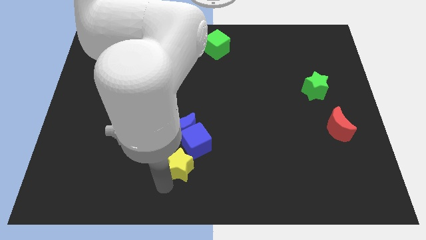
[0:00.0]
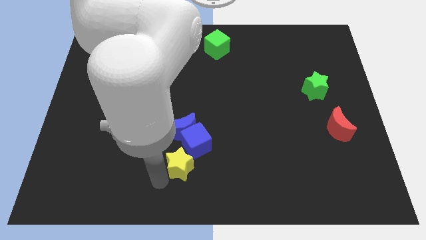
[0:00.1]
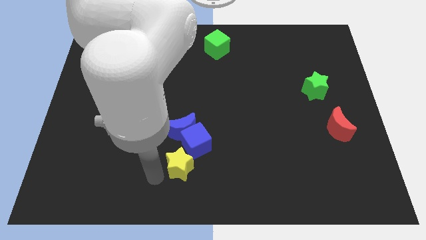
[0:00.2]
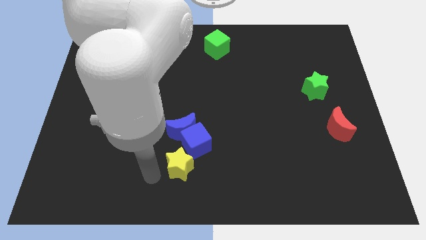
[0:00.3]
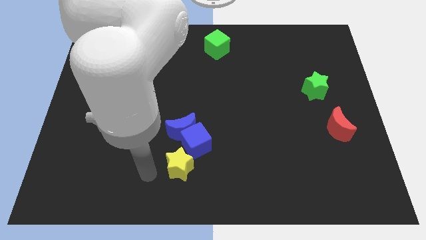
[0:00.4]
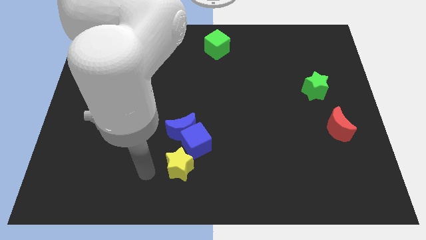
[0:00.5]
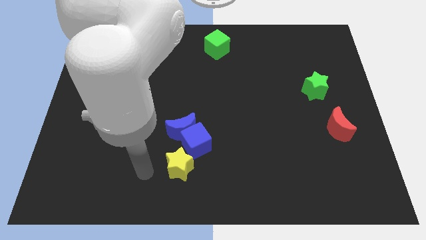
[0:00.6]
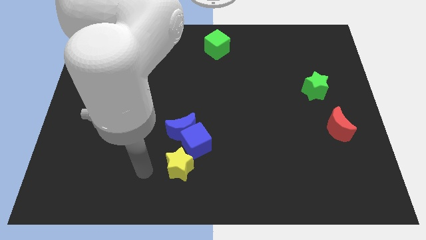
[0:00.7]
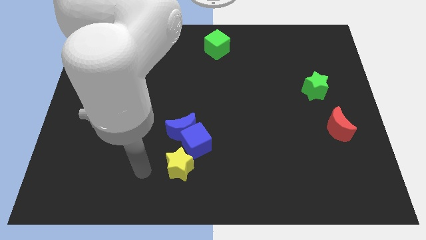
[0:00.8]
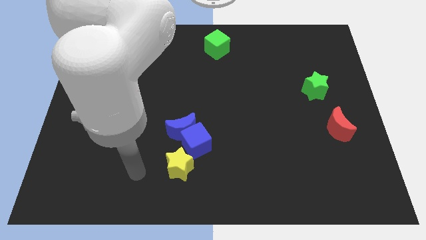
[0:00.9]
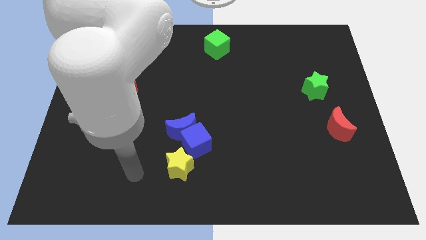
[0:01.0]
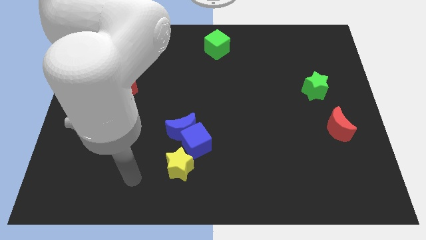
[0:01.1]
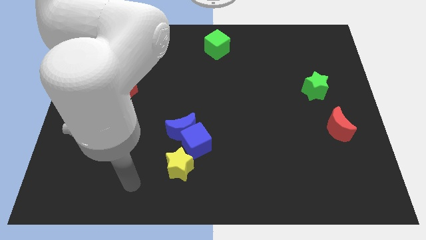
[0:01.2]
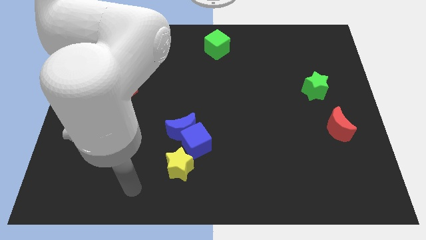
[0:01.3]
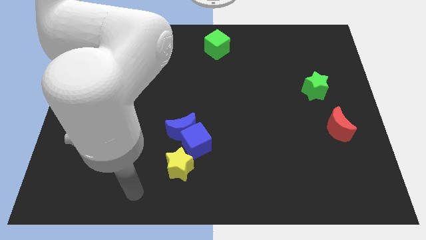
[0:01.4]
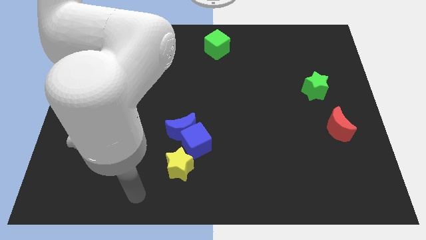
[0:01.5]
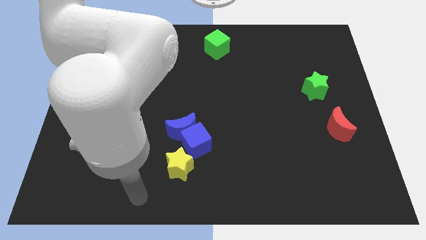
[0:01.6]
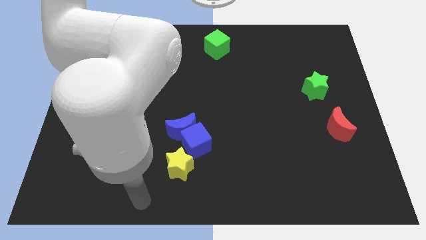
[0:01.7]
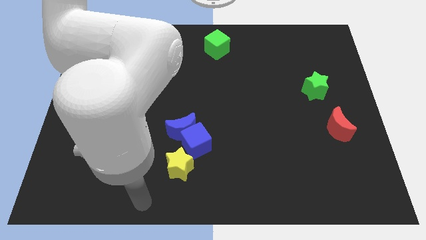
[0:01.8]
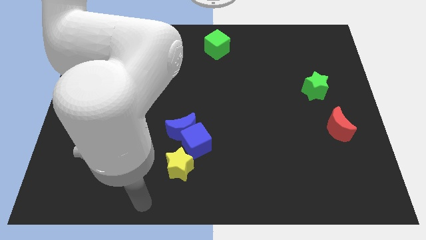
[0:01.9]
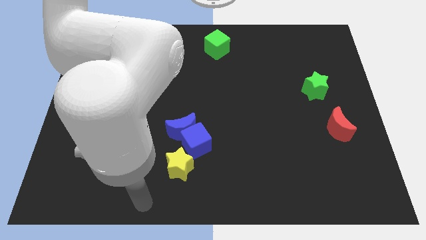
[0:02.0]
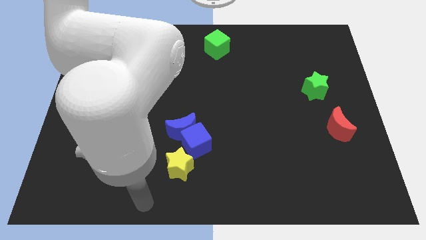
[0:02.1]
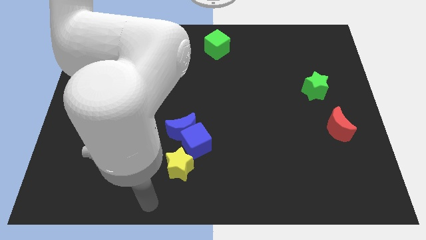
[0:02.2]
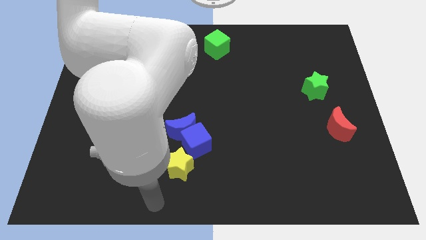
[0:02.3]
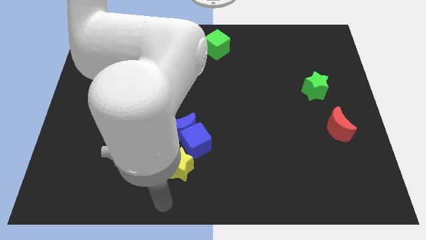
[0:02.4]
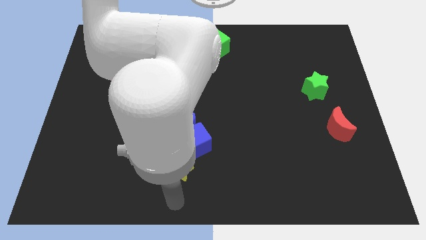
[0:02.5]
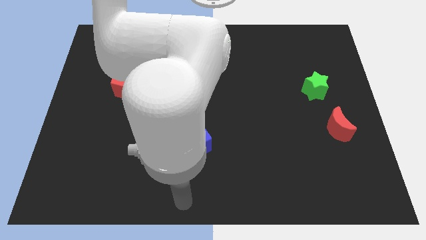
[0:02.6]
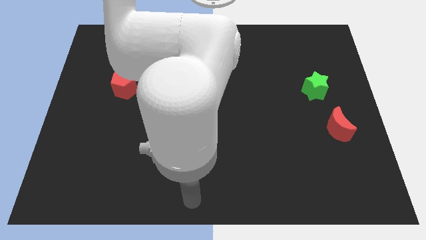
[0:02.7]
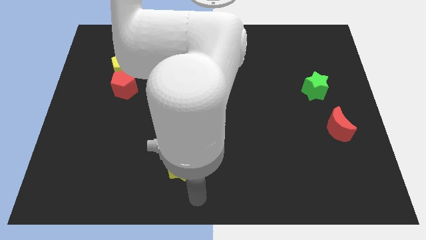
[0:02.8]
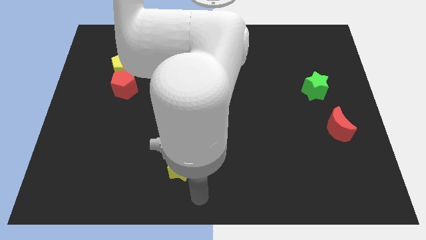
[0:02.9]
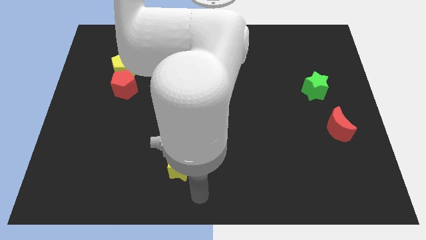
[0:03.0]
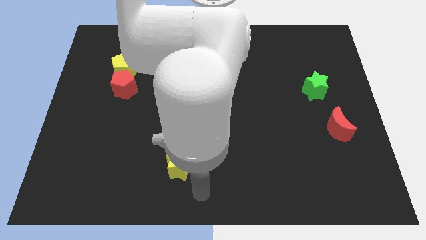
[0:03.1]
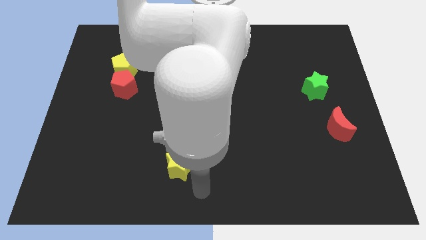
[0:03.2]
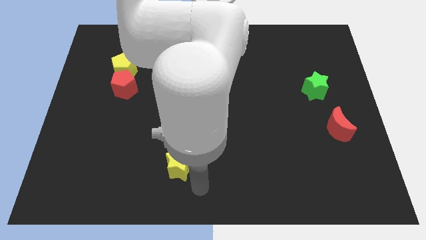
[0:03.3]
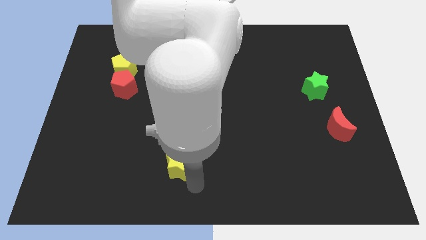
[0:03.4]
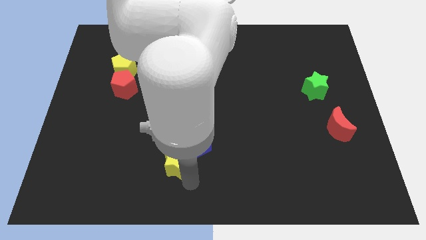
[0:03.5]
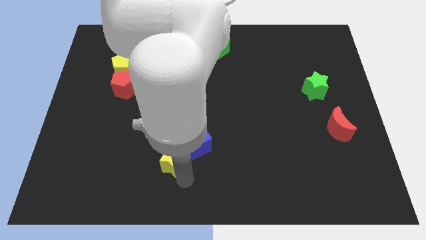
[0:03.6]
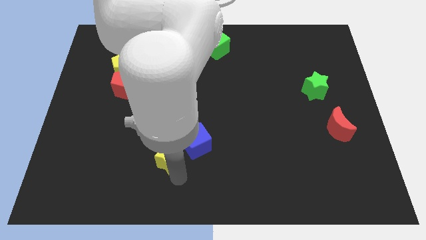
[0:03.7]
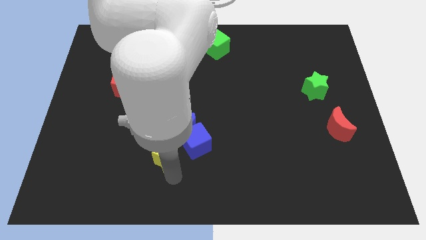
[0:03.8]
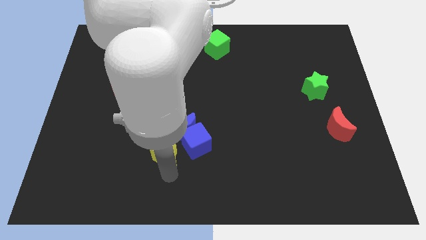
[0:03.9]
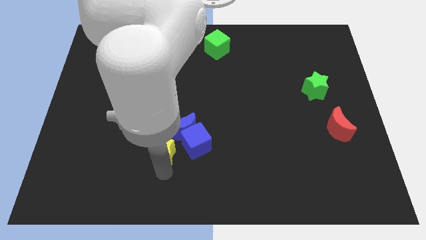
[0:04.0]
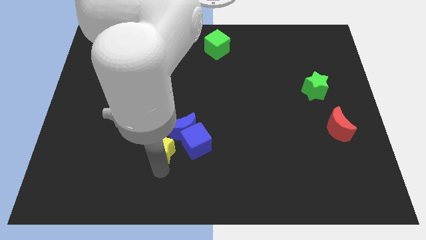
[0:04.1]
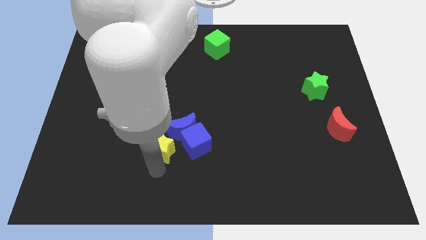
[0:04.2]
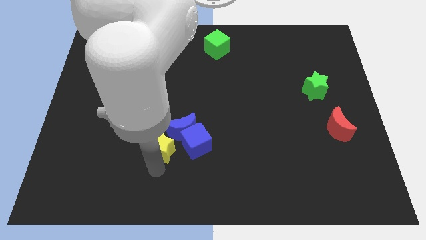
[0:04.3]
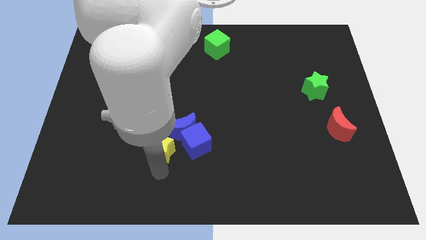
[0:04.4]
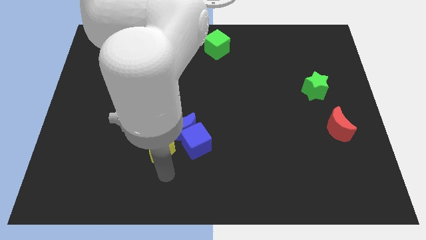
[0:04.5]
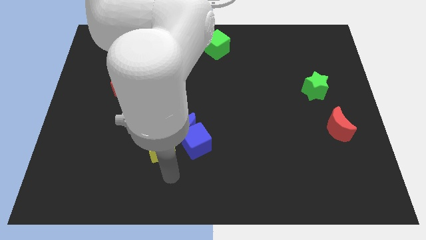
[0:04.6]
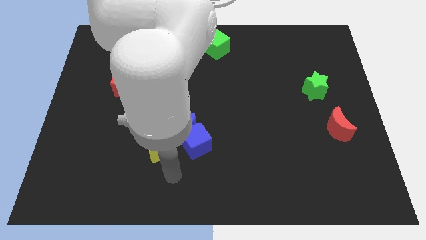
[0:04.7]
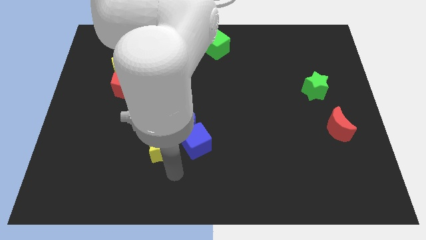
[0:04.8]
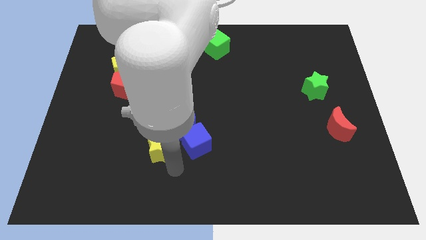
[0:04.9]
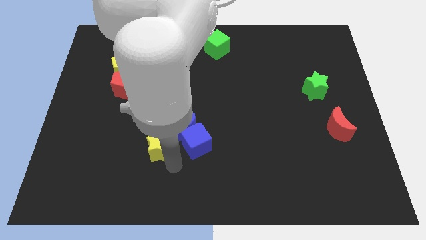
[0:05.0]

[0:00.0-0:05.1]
place yellow star to the left of blue cube

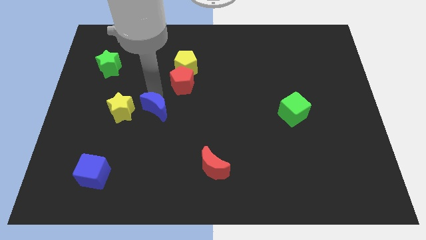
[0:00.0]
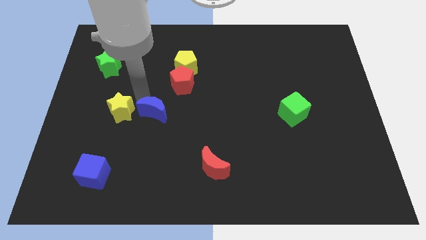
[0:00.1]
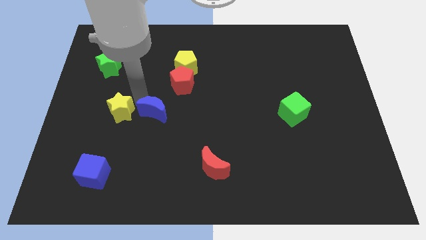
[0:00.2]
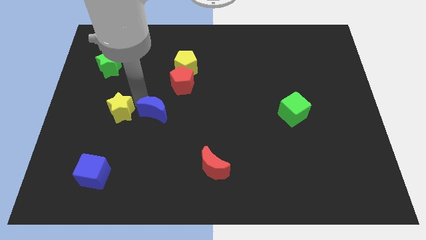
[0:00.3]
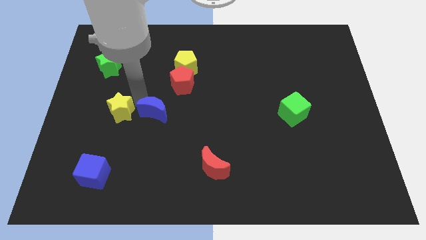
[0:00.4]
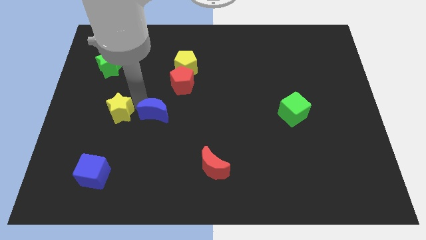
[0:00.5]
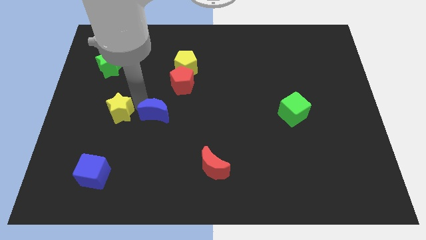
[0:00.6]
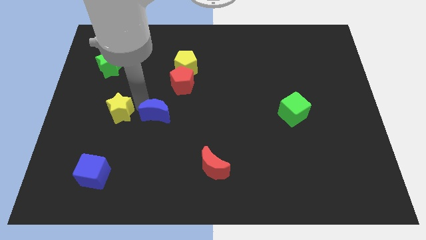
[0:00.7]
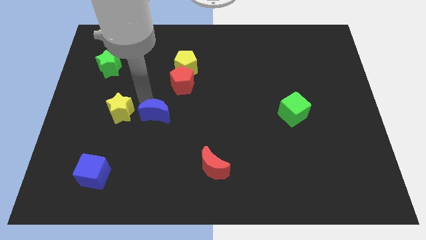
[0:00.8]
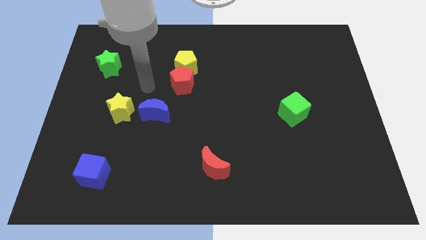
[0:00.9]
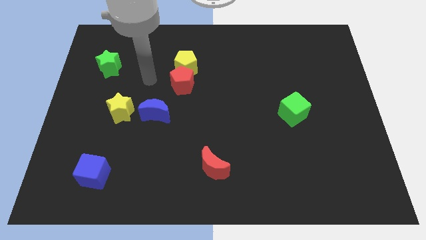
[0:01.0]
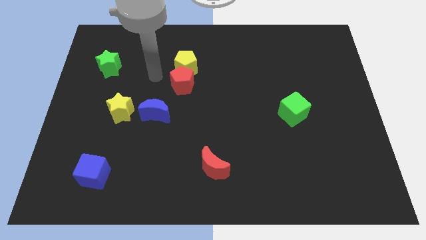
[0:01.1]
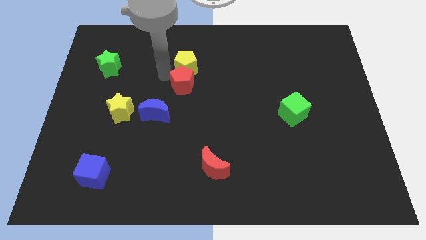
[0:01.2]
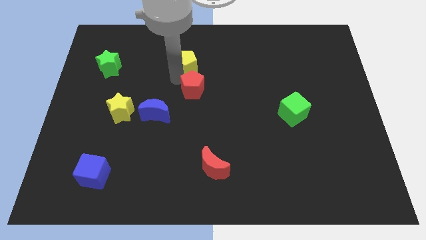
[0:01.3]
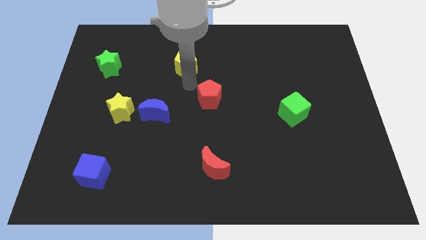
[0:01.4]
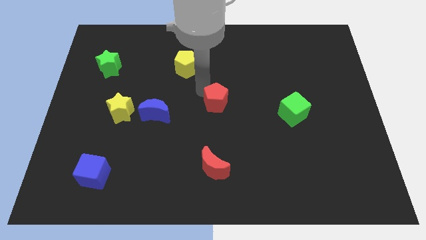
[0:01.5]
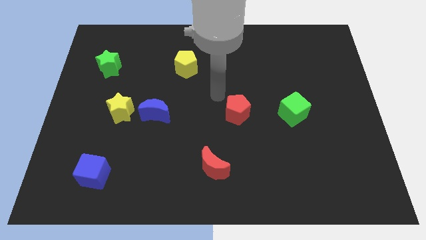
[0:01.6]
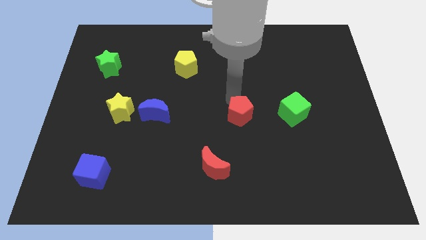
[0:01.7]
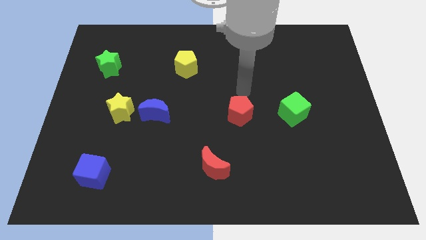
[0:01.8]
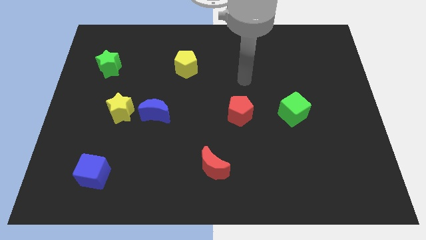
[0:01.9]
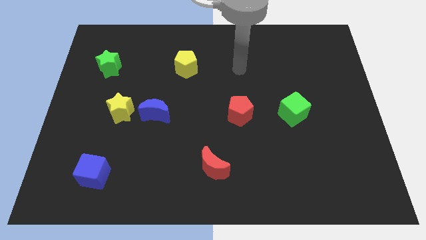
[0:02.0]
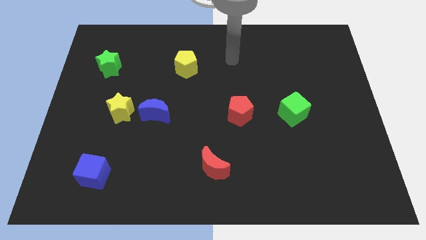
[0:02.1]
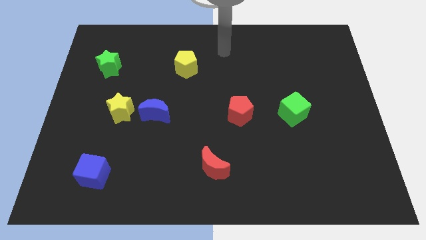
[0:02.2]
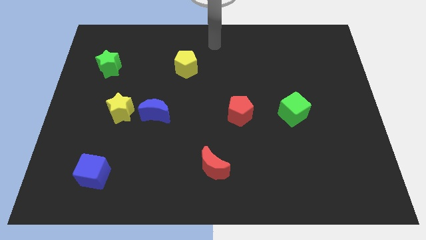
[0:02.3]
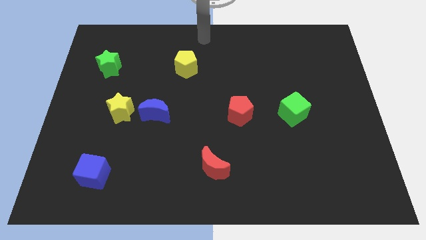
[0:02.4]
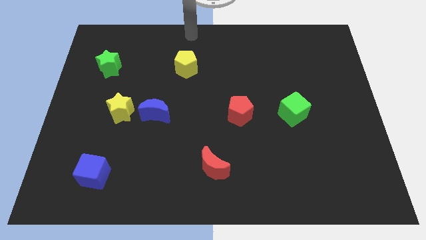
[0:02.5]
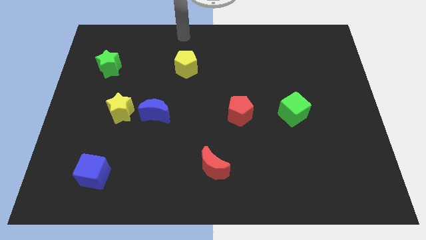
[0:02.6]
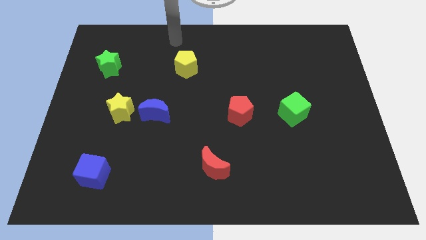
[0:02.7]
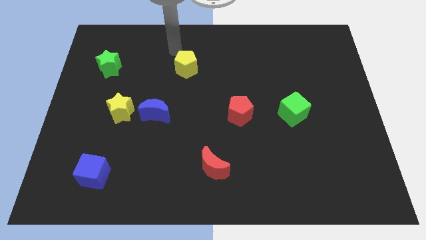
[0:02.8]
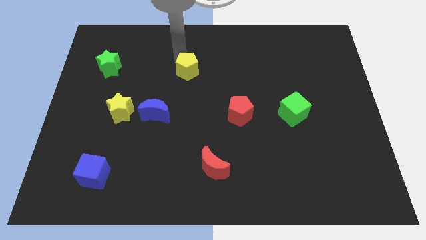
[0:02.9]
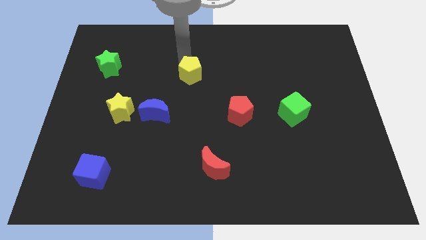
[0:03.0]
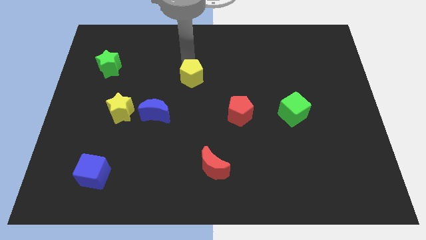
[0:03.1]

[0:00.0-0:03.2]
move the red pentagon to the left of the green cube

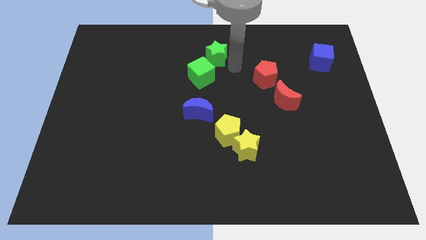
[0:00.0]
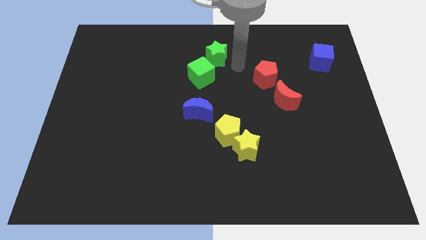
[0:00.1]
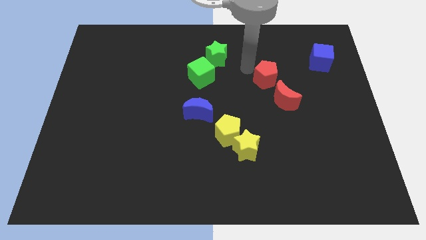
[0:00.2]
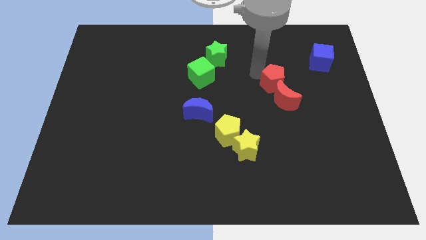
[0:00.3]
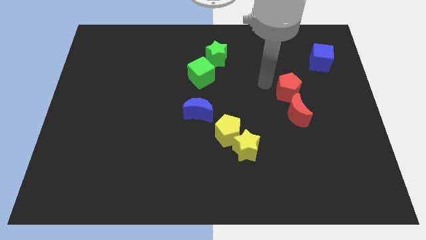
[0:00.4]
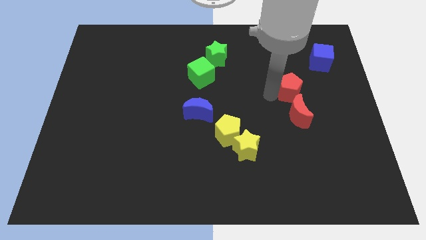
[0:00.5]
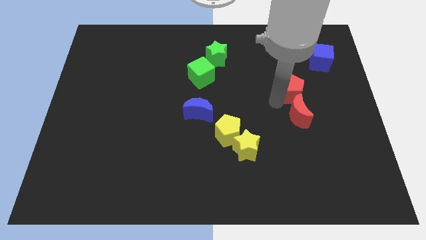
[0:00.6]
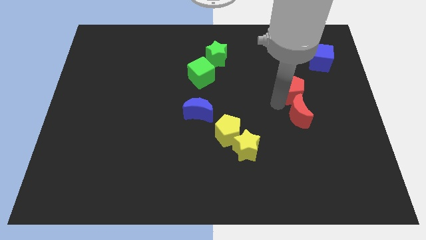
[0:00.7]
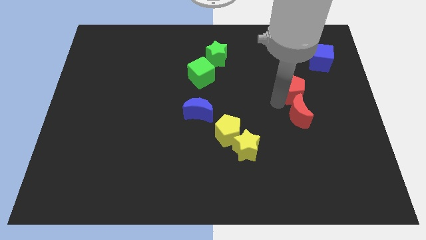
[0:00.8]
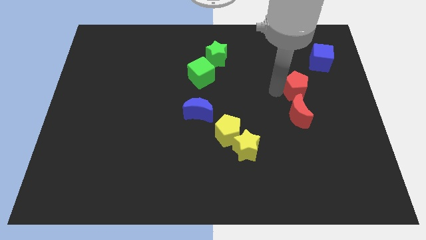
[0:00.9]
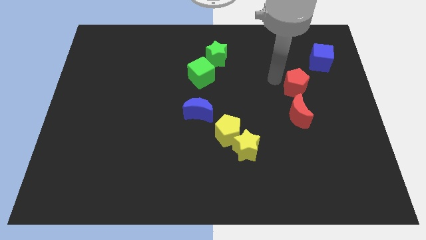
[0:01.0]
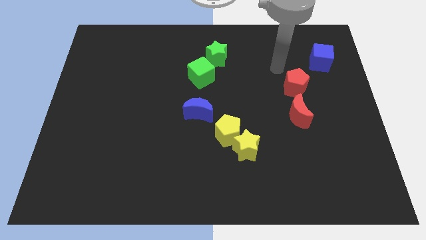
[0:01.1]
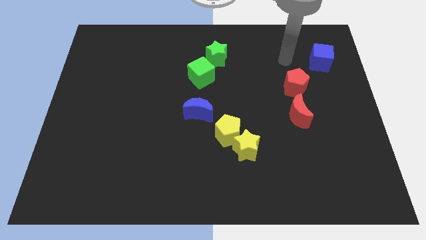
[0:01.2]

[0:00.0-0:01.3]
push the red pentagon to the right side towards the center right
